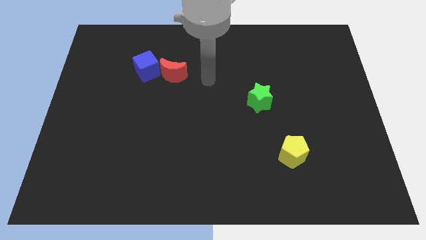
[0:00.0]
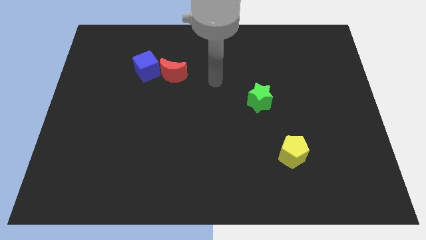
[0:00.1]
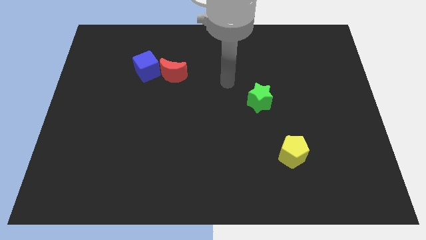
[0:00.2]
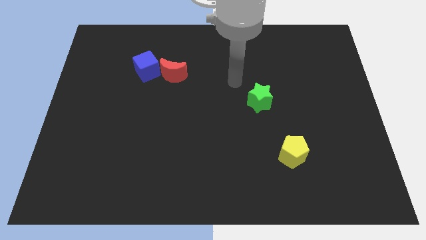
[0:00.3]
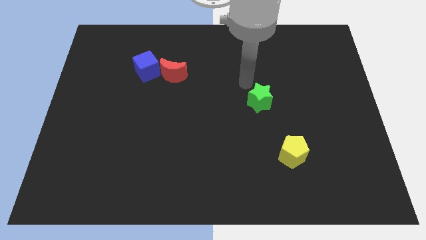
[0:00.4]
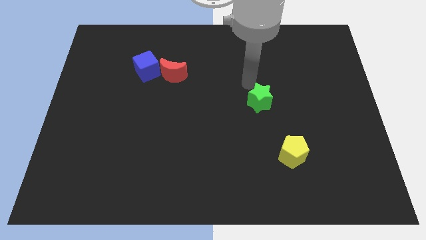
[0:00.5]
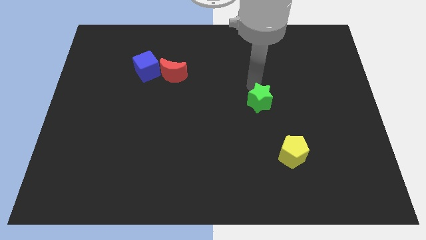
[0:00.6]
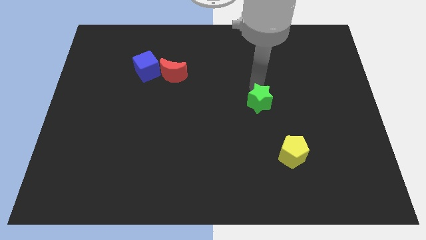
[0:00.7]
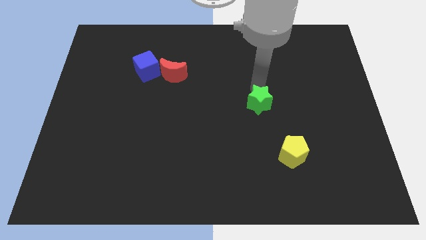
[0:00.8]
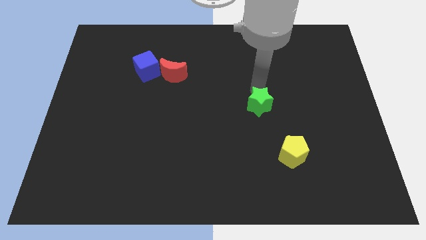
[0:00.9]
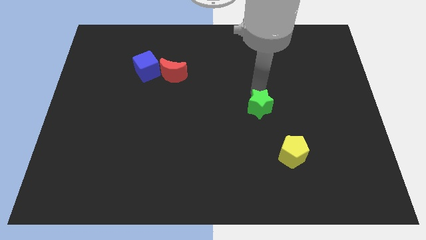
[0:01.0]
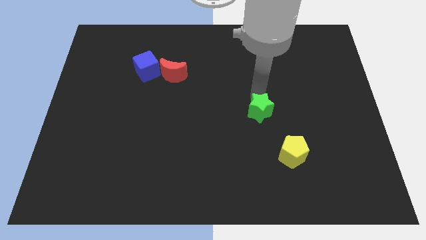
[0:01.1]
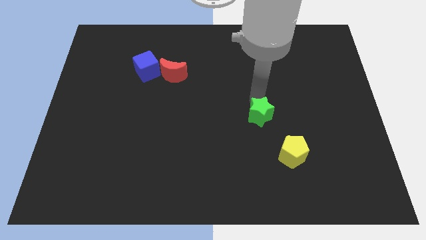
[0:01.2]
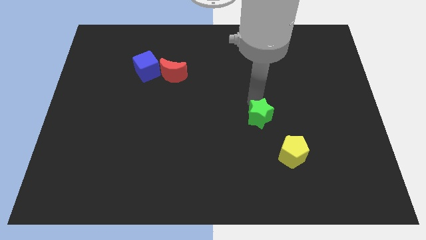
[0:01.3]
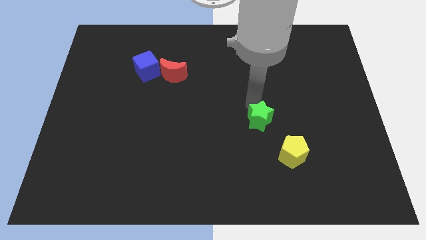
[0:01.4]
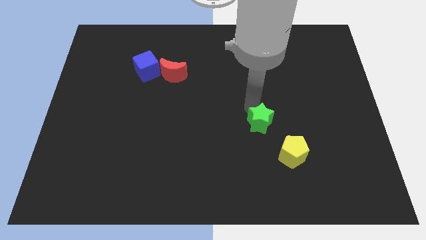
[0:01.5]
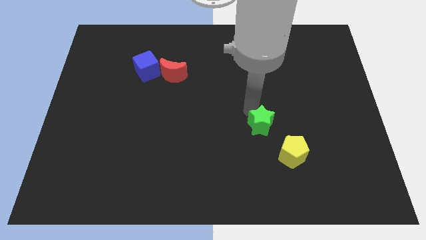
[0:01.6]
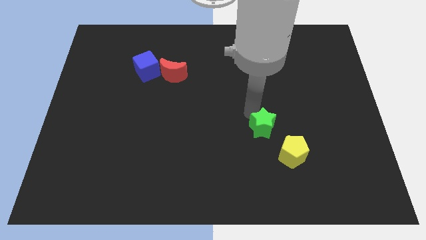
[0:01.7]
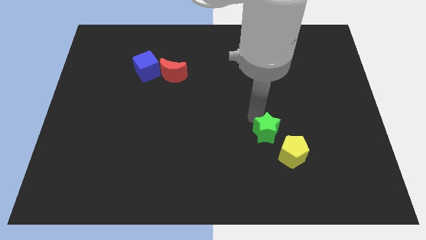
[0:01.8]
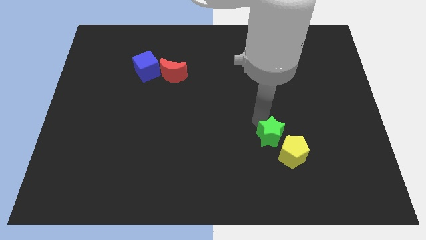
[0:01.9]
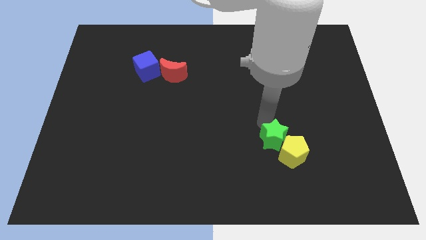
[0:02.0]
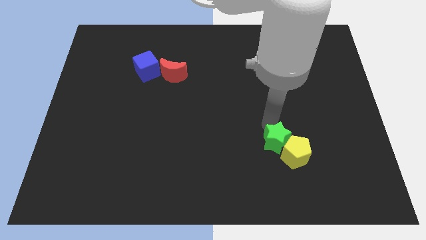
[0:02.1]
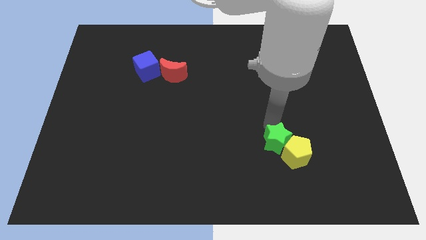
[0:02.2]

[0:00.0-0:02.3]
push the green star to the yellow block

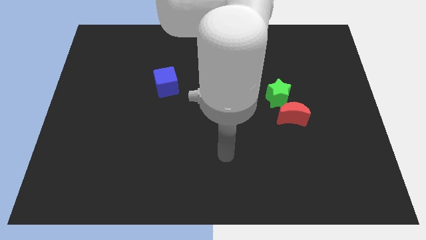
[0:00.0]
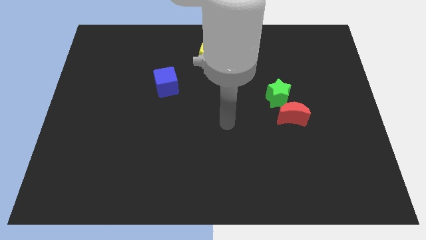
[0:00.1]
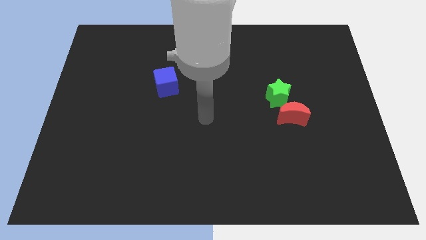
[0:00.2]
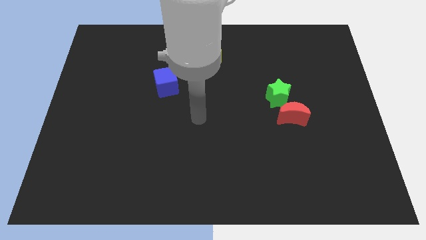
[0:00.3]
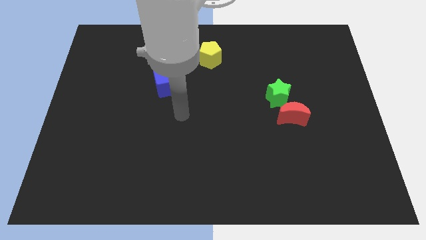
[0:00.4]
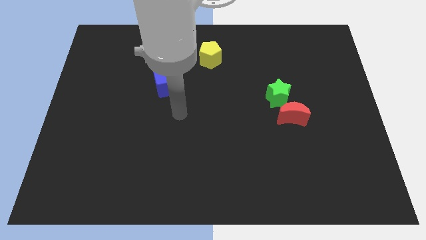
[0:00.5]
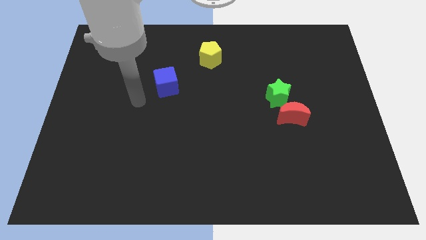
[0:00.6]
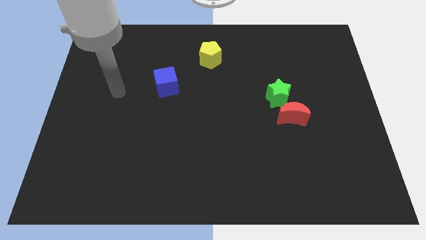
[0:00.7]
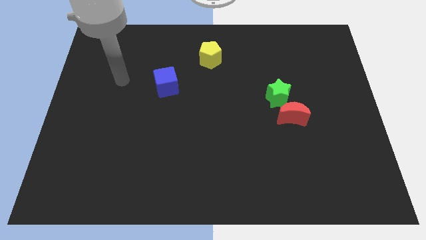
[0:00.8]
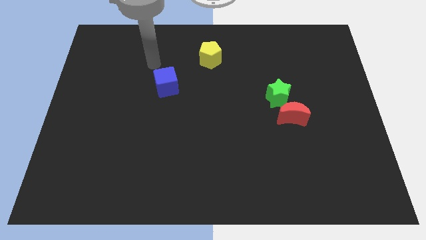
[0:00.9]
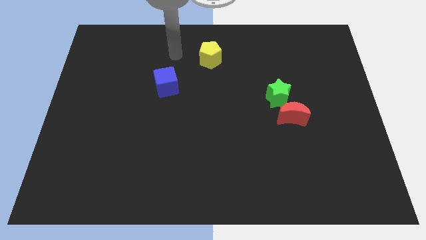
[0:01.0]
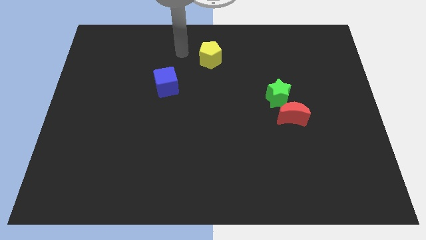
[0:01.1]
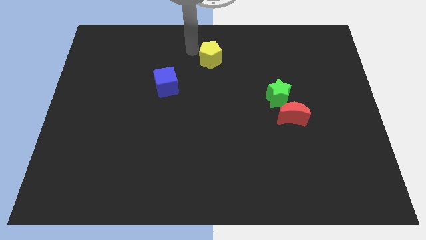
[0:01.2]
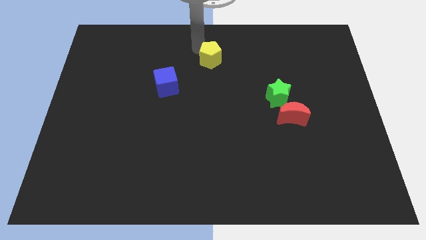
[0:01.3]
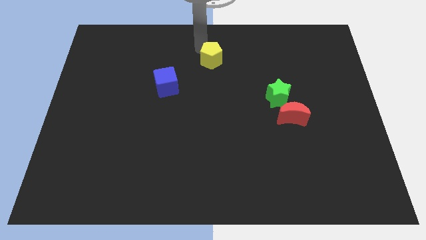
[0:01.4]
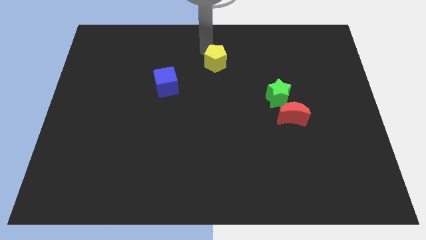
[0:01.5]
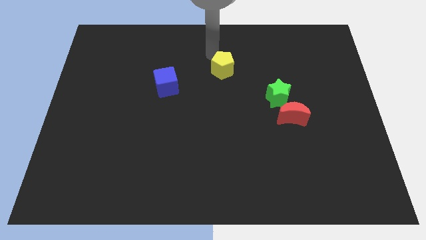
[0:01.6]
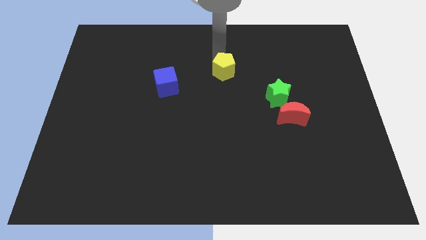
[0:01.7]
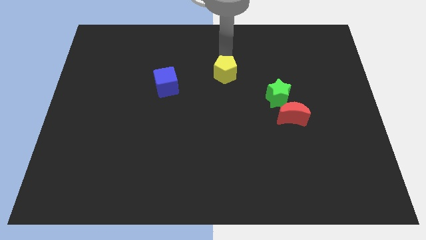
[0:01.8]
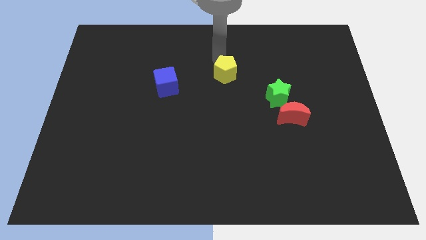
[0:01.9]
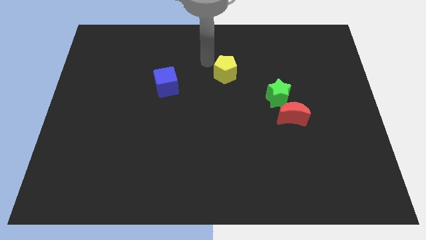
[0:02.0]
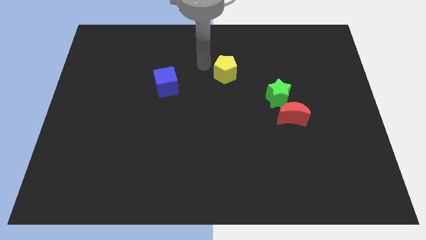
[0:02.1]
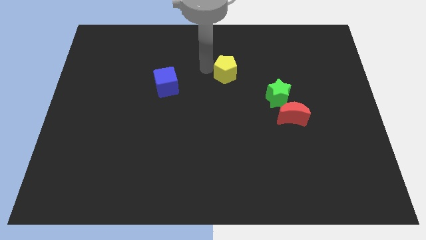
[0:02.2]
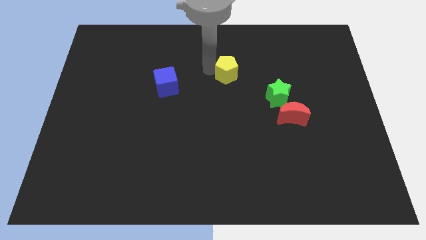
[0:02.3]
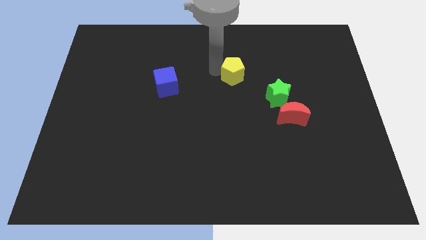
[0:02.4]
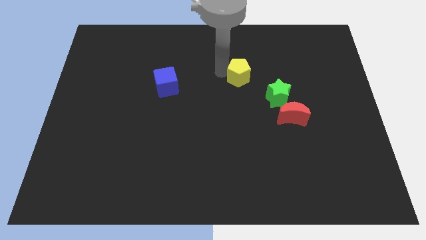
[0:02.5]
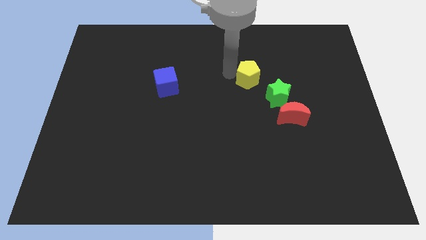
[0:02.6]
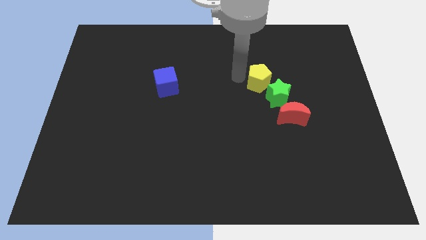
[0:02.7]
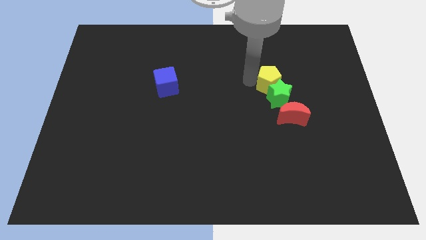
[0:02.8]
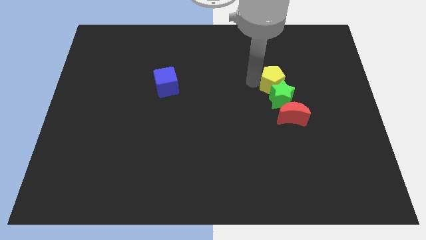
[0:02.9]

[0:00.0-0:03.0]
slide the yellow pentagon to the green block

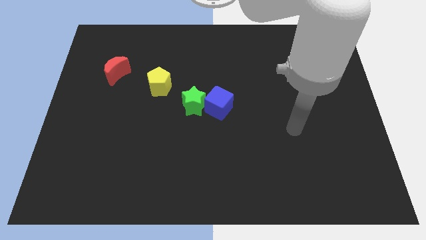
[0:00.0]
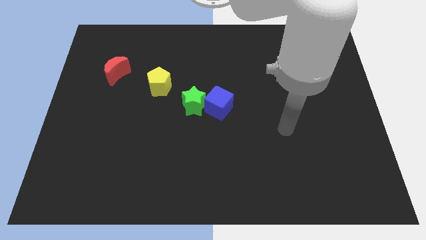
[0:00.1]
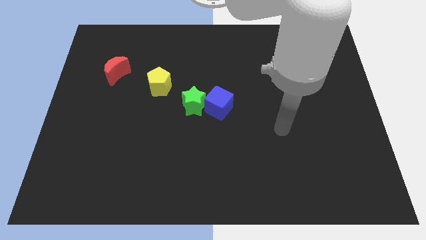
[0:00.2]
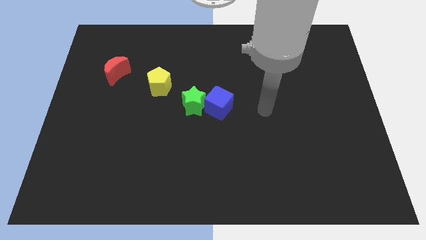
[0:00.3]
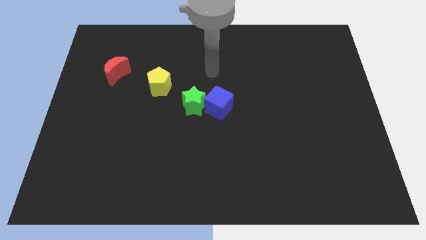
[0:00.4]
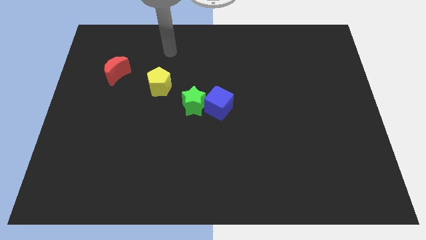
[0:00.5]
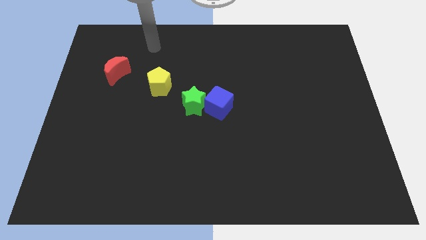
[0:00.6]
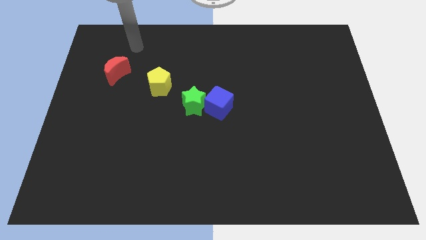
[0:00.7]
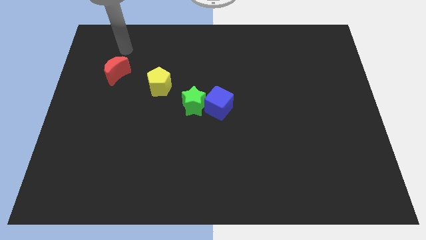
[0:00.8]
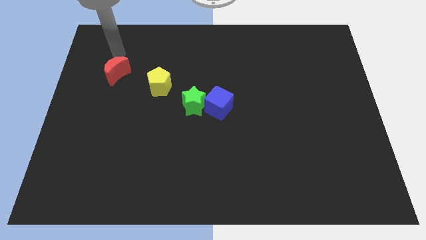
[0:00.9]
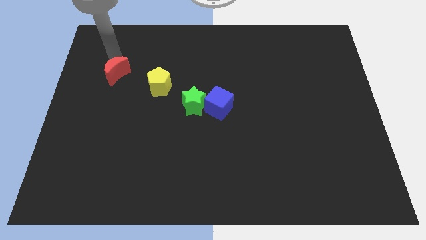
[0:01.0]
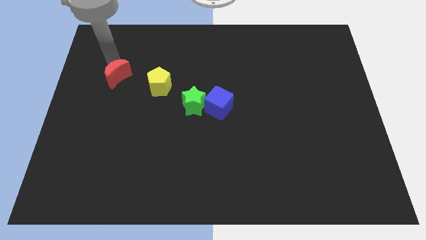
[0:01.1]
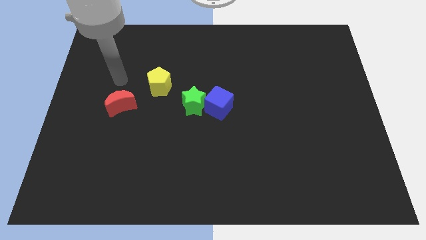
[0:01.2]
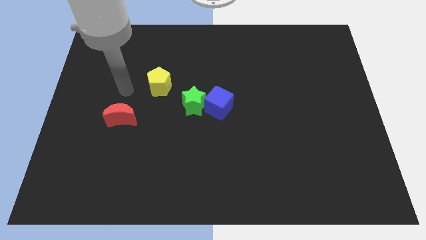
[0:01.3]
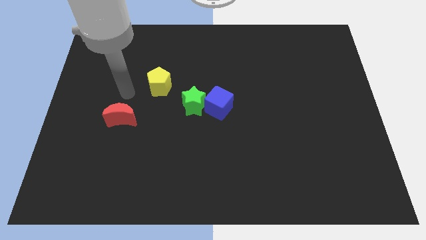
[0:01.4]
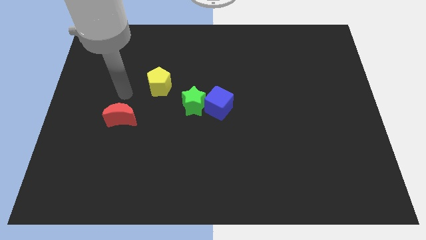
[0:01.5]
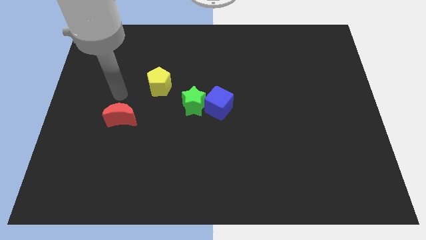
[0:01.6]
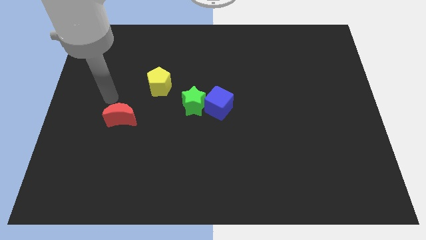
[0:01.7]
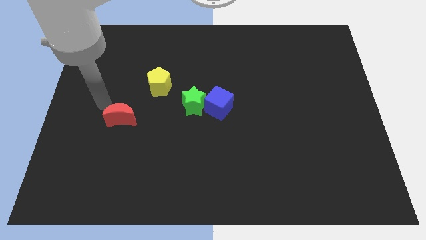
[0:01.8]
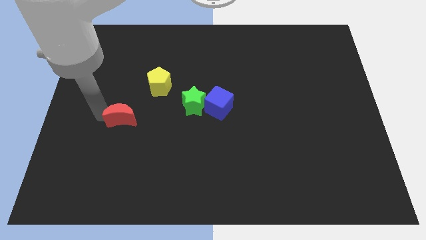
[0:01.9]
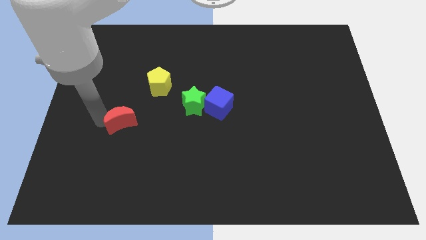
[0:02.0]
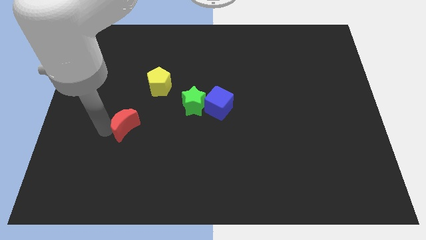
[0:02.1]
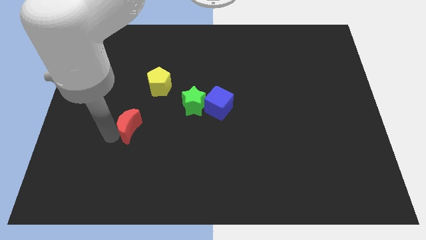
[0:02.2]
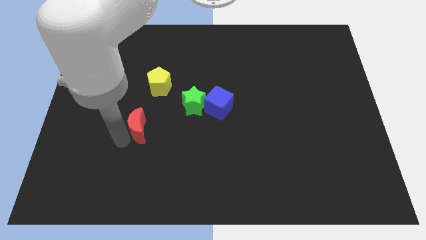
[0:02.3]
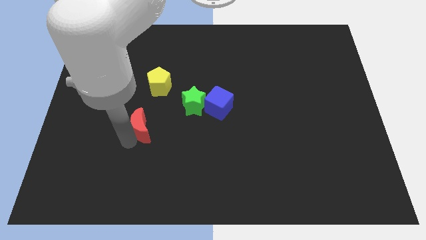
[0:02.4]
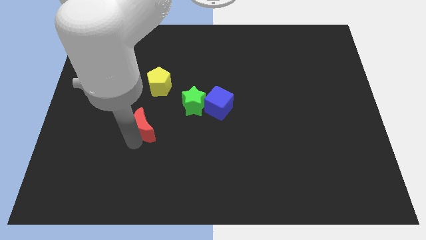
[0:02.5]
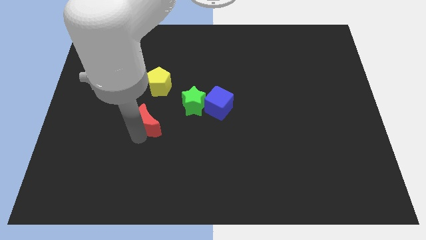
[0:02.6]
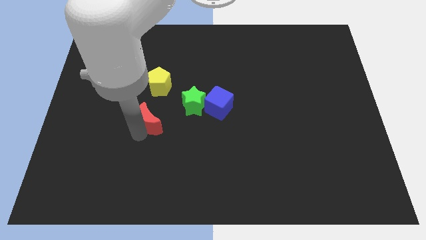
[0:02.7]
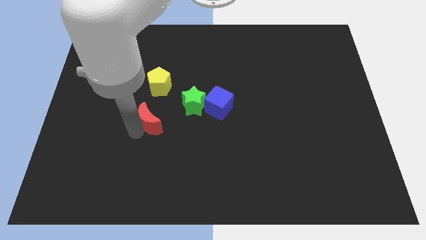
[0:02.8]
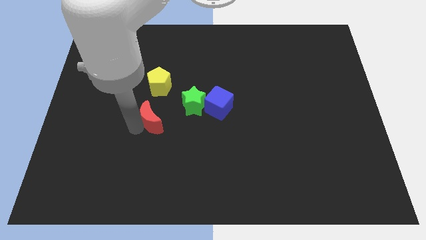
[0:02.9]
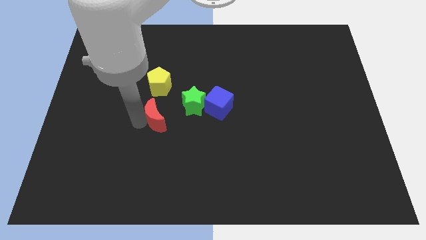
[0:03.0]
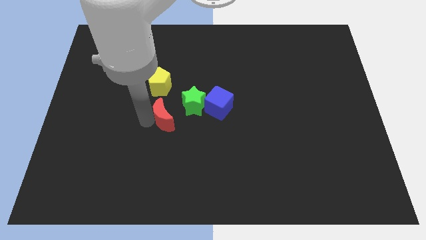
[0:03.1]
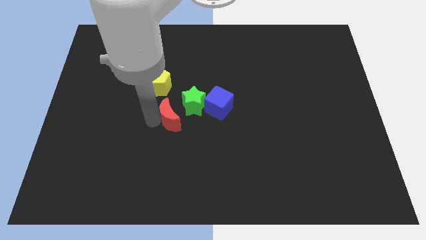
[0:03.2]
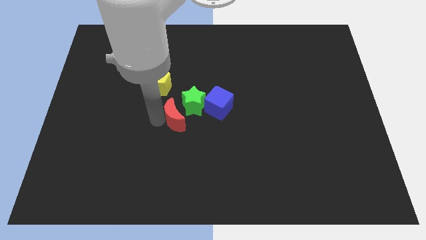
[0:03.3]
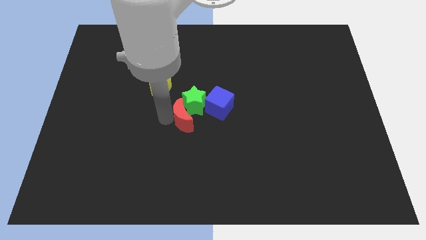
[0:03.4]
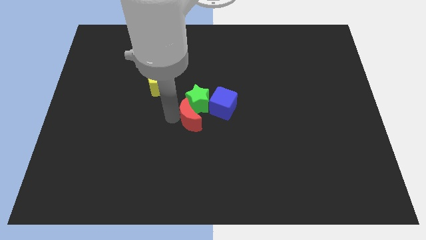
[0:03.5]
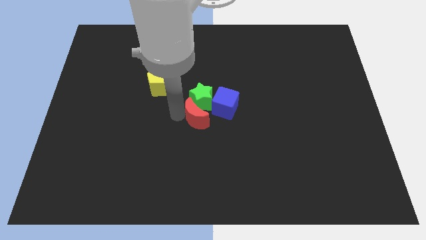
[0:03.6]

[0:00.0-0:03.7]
slide the red block close to the green block
